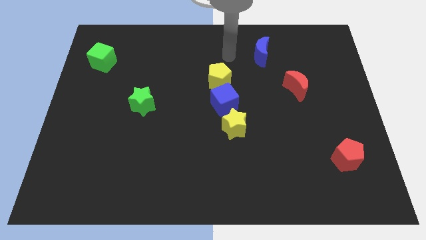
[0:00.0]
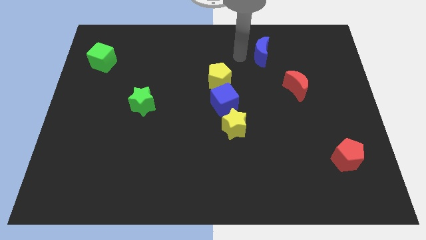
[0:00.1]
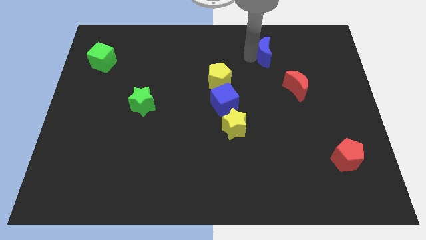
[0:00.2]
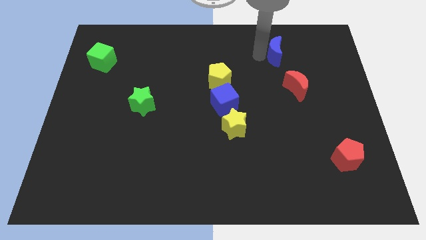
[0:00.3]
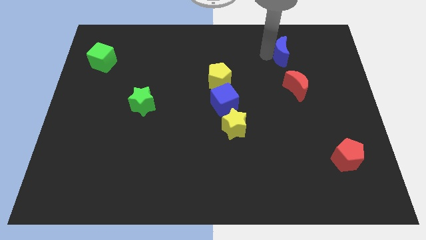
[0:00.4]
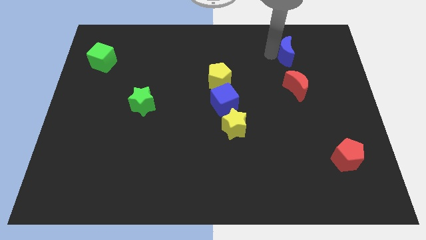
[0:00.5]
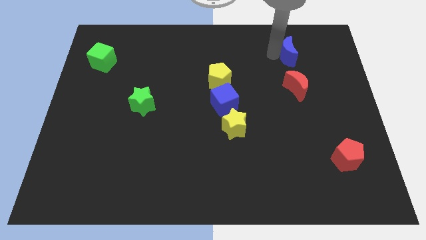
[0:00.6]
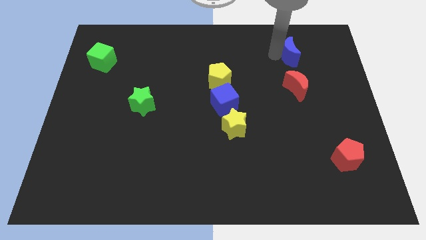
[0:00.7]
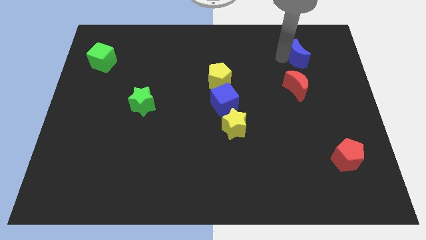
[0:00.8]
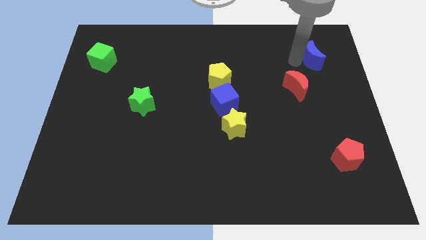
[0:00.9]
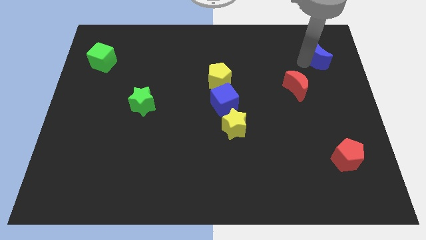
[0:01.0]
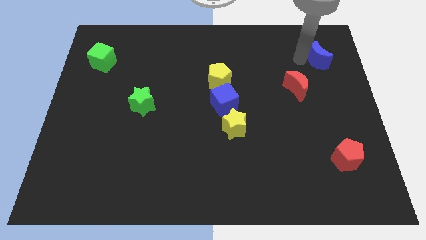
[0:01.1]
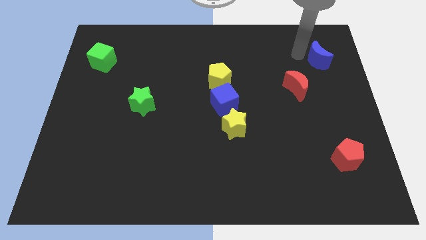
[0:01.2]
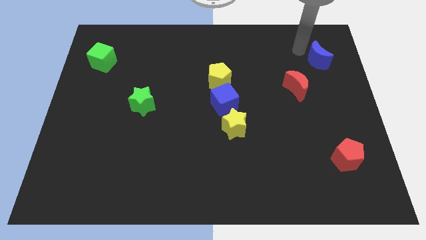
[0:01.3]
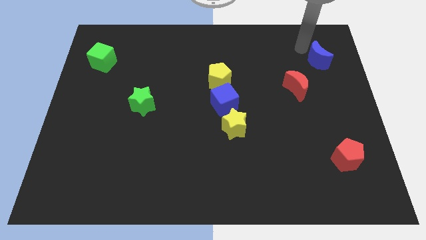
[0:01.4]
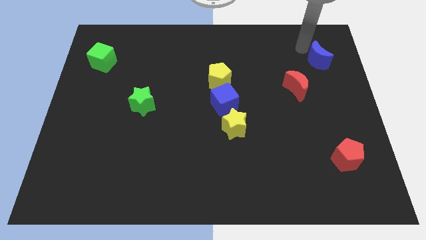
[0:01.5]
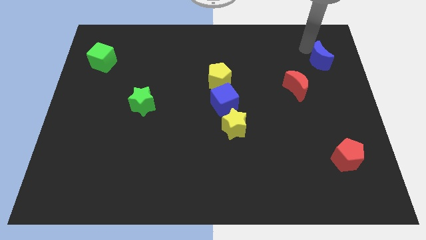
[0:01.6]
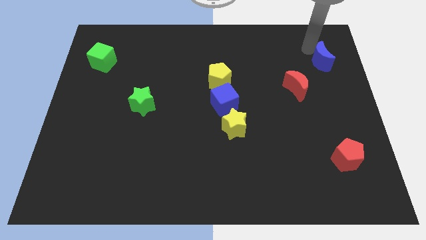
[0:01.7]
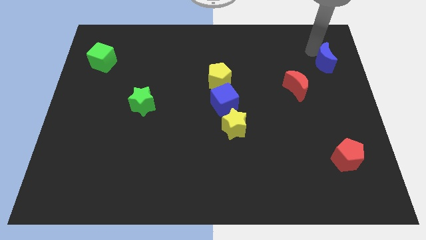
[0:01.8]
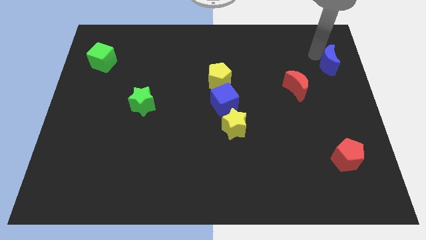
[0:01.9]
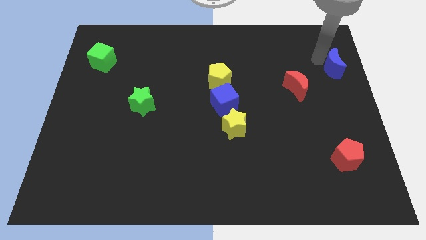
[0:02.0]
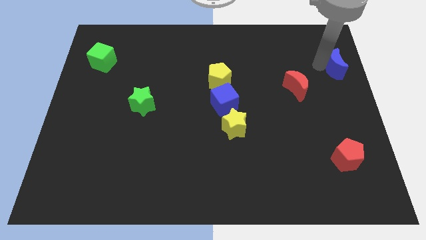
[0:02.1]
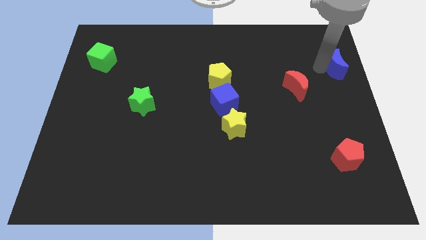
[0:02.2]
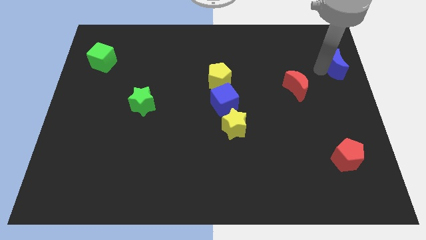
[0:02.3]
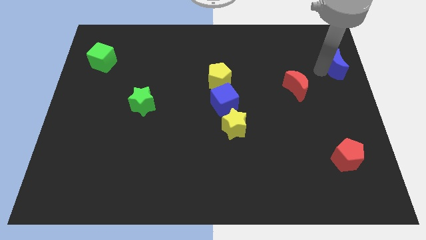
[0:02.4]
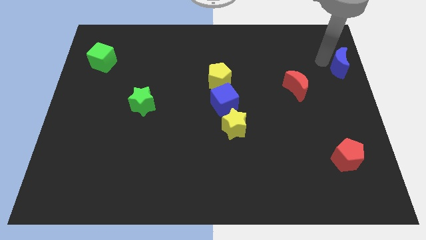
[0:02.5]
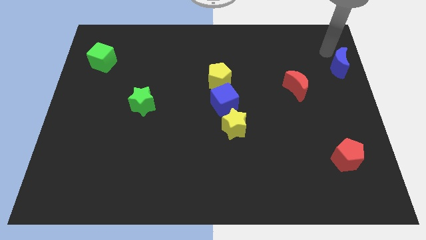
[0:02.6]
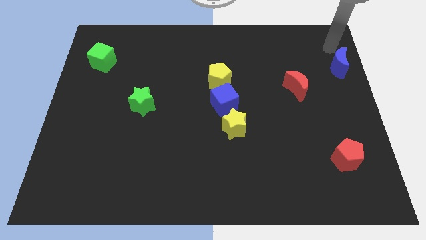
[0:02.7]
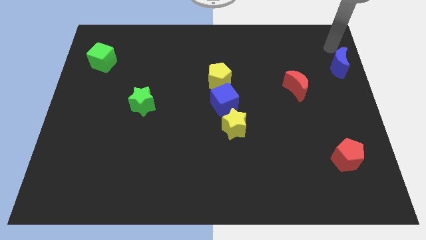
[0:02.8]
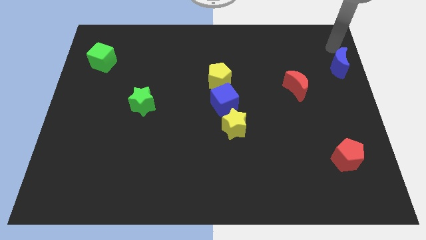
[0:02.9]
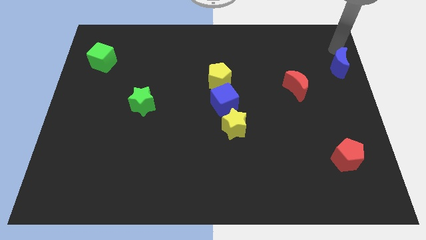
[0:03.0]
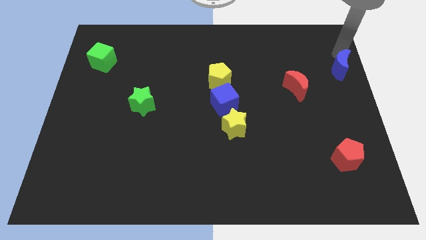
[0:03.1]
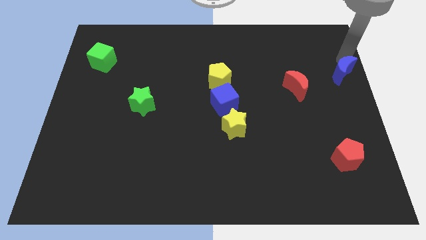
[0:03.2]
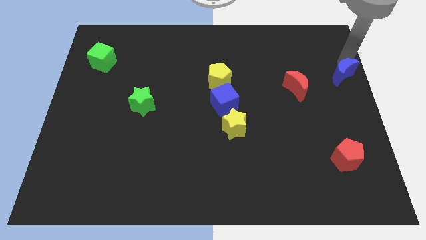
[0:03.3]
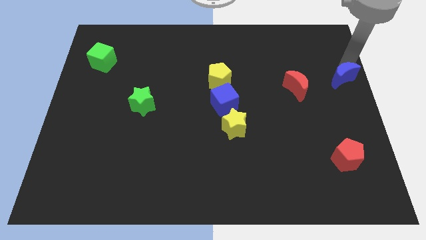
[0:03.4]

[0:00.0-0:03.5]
push the blue moon to the right side of the board

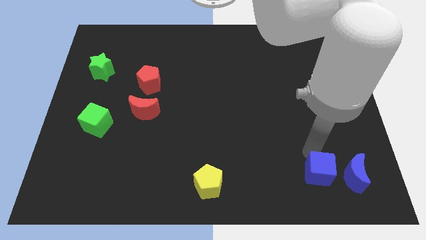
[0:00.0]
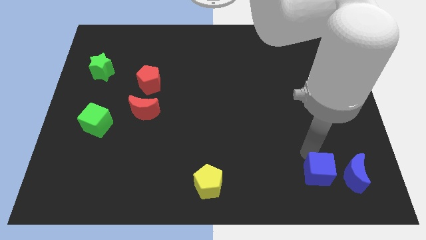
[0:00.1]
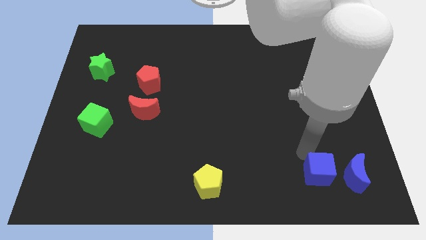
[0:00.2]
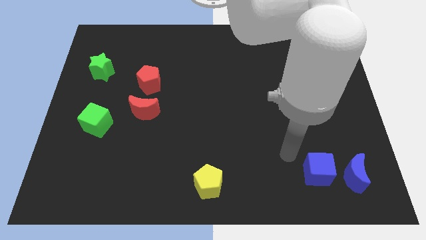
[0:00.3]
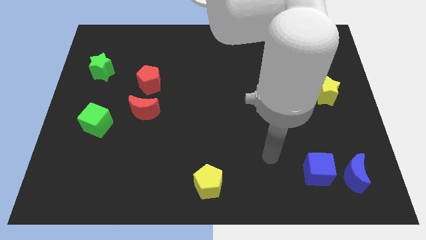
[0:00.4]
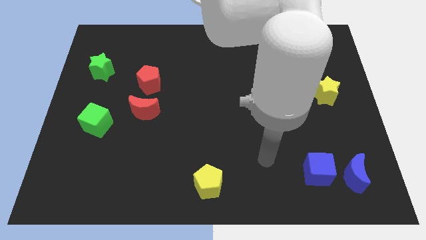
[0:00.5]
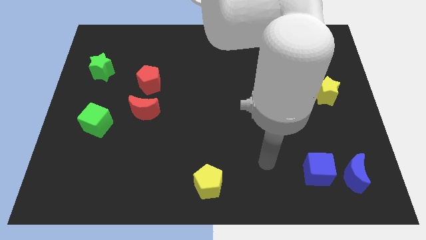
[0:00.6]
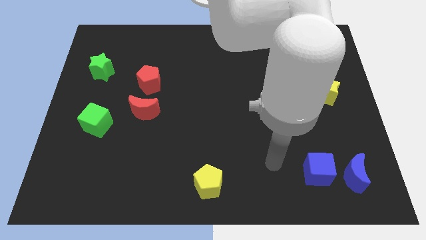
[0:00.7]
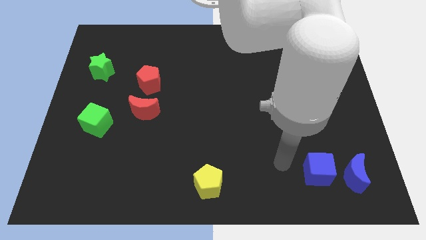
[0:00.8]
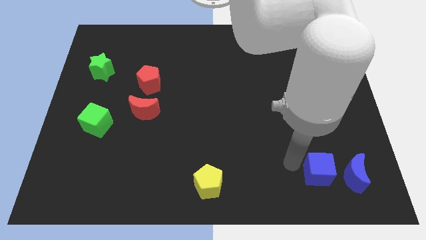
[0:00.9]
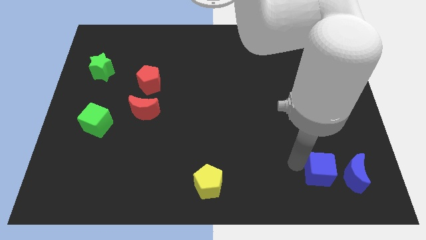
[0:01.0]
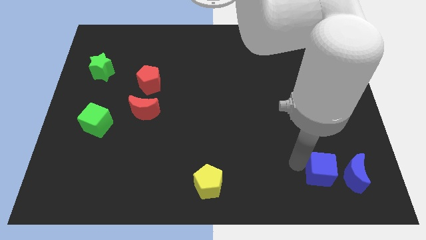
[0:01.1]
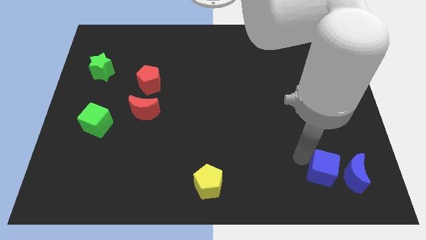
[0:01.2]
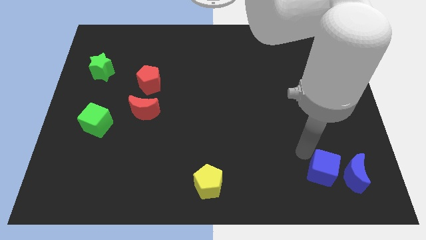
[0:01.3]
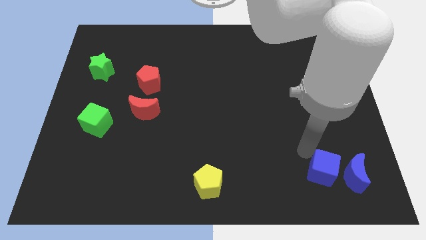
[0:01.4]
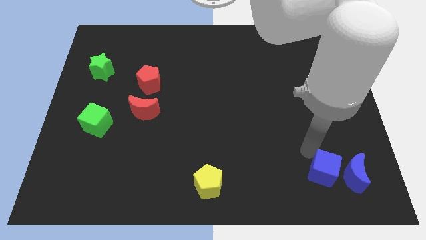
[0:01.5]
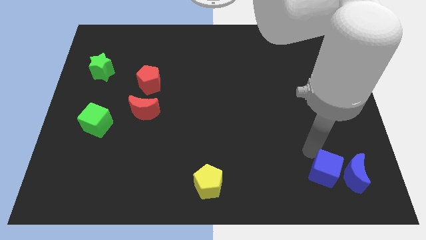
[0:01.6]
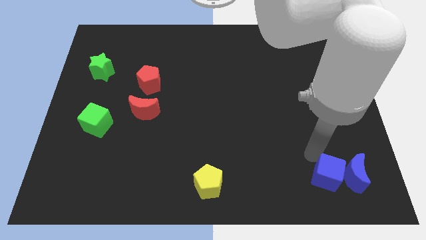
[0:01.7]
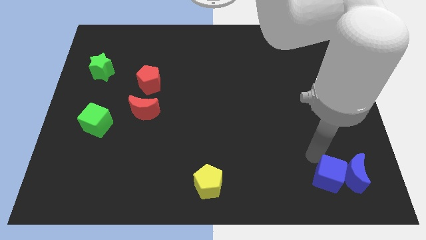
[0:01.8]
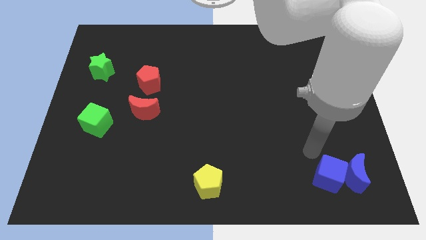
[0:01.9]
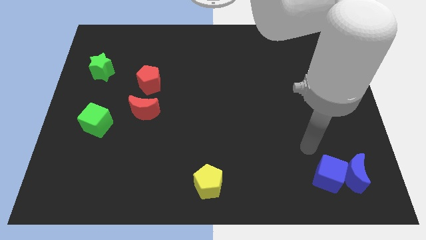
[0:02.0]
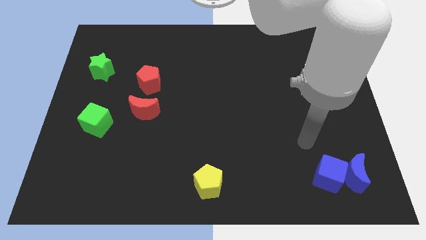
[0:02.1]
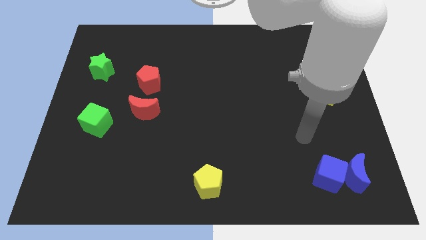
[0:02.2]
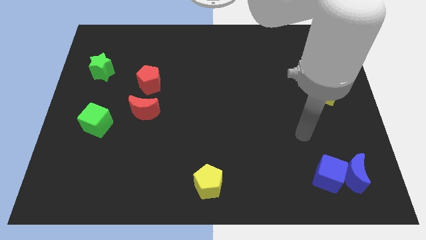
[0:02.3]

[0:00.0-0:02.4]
push the blue cube to the left of the blue moon

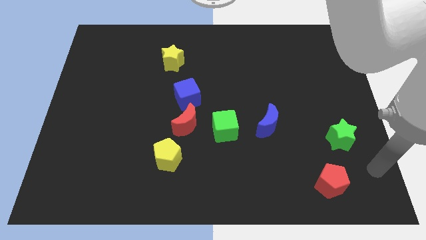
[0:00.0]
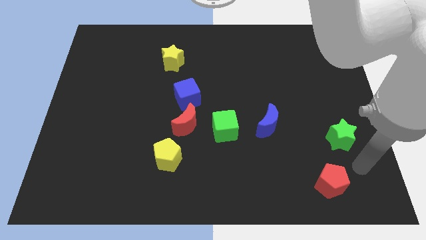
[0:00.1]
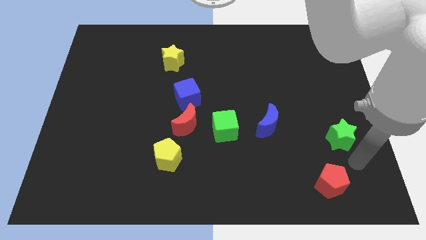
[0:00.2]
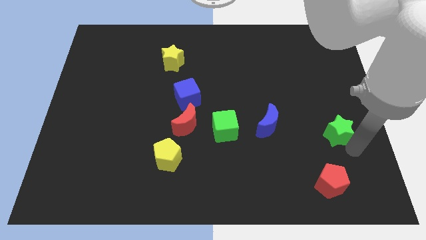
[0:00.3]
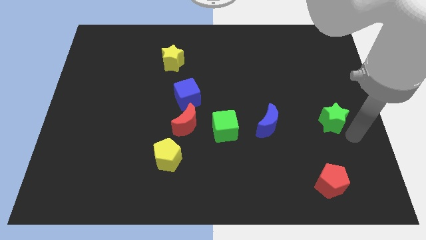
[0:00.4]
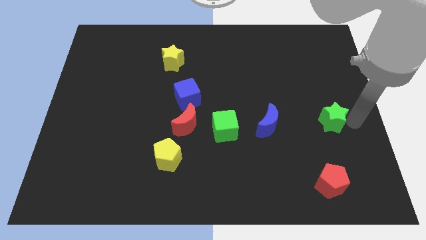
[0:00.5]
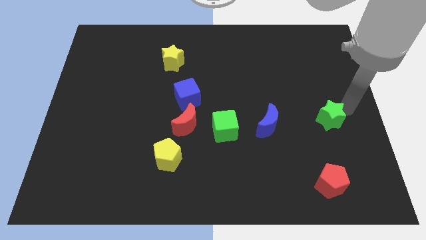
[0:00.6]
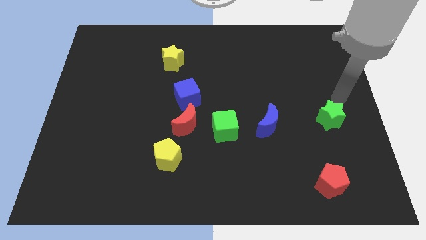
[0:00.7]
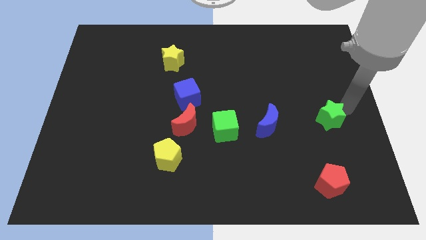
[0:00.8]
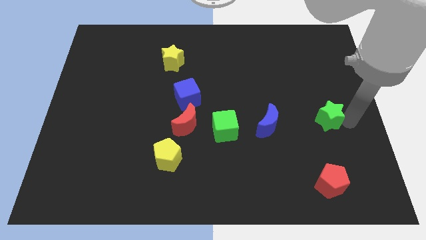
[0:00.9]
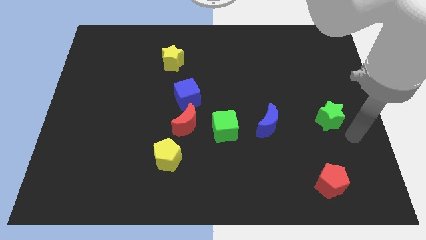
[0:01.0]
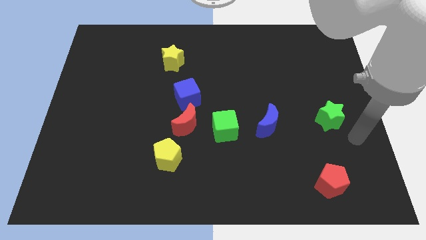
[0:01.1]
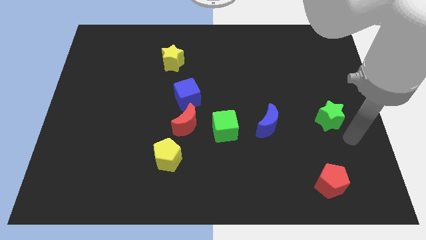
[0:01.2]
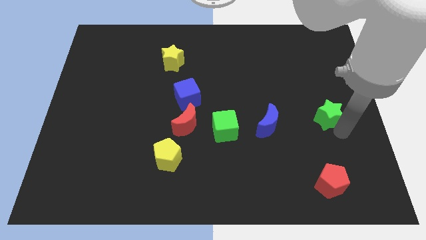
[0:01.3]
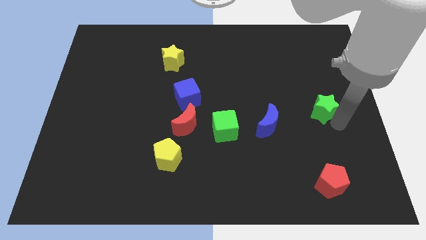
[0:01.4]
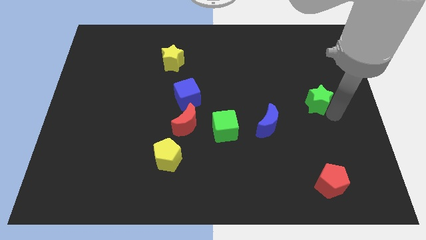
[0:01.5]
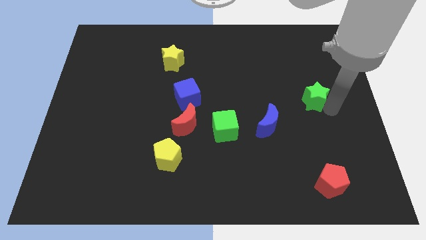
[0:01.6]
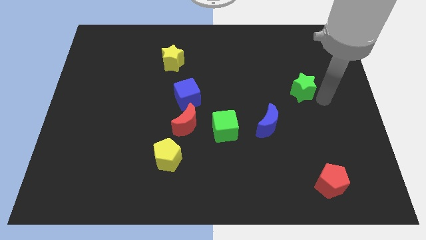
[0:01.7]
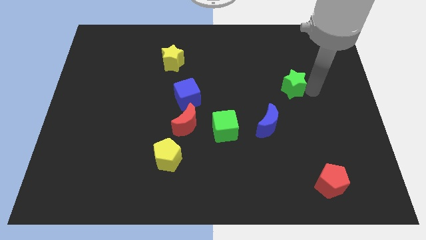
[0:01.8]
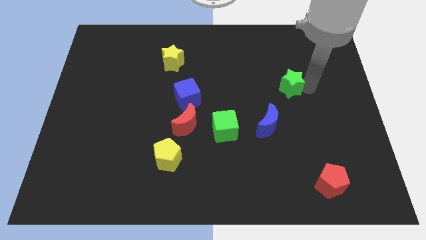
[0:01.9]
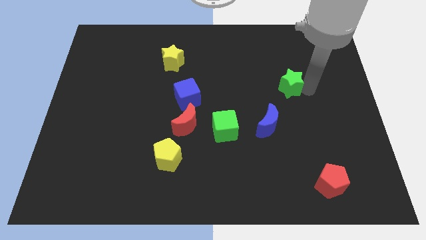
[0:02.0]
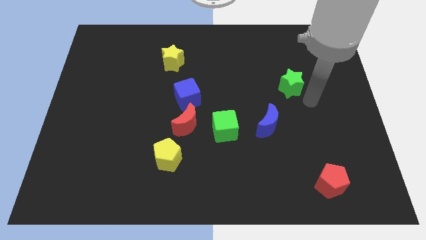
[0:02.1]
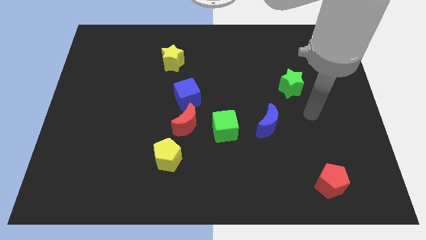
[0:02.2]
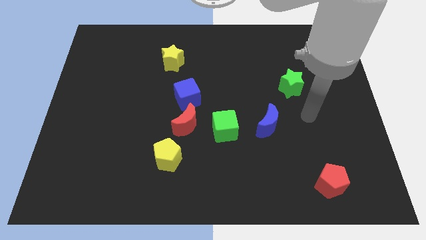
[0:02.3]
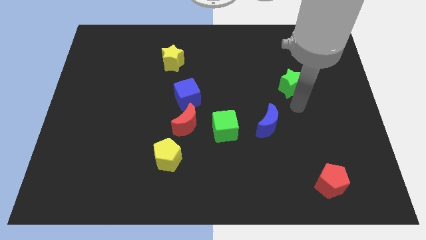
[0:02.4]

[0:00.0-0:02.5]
move the green star to the top right of the blue moon

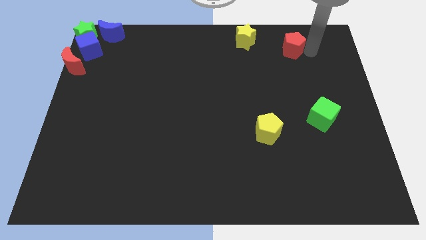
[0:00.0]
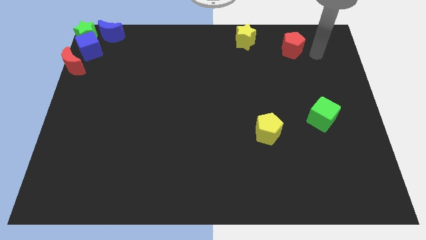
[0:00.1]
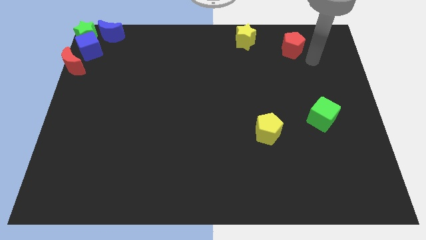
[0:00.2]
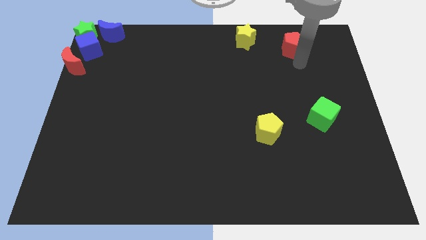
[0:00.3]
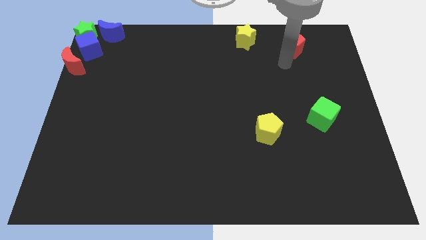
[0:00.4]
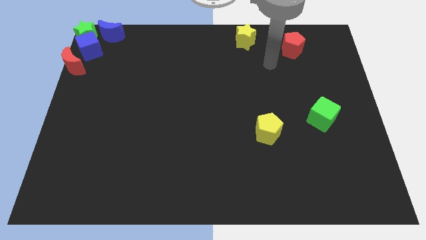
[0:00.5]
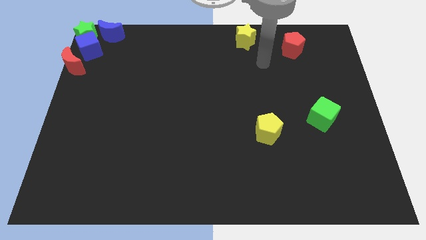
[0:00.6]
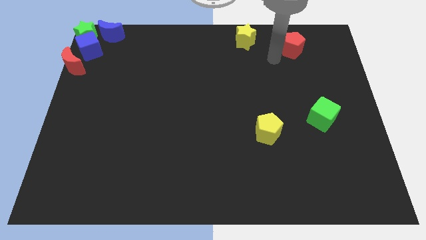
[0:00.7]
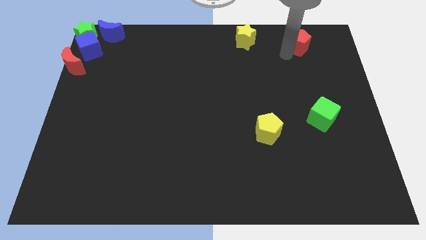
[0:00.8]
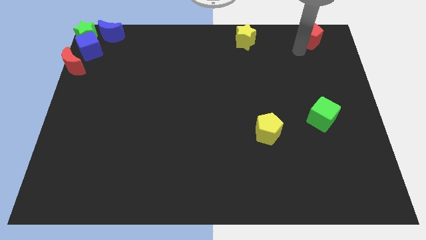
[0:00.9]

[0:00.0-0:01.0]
push the red pentagon to the right of the yellow star
